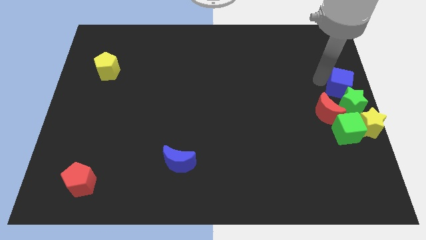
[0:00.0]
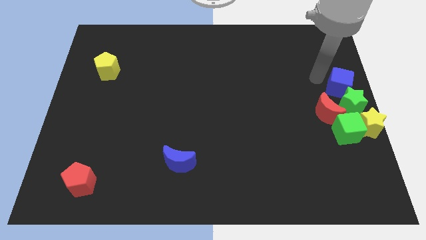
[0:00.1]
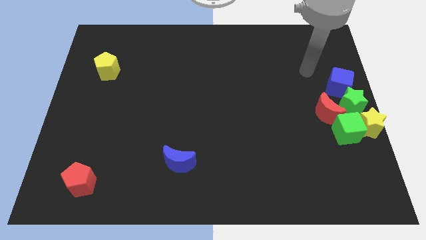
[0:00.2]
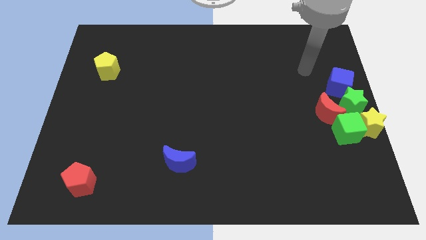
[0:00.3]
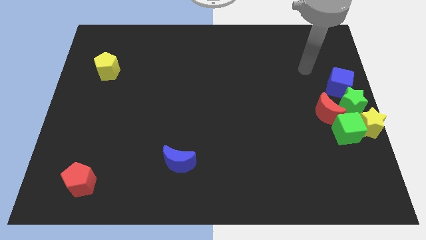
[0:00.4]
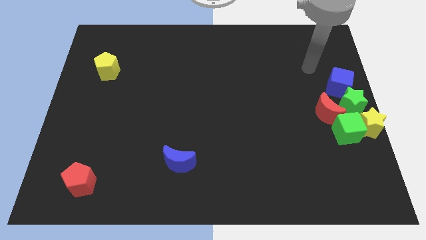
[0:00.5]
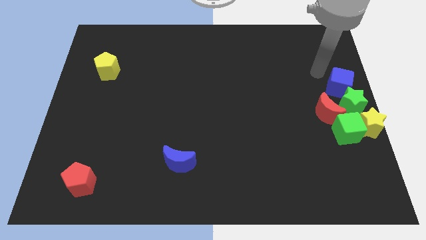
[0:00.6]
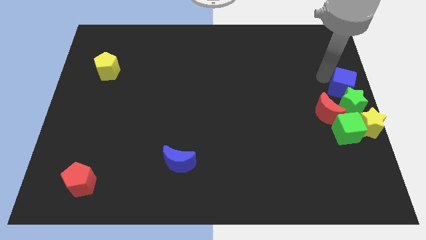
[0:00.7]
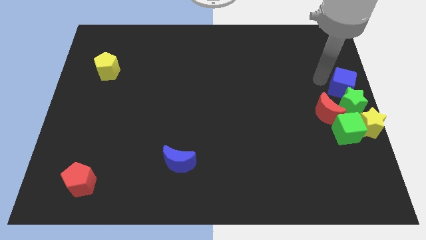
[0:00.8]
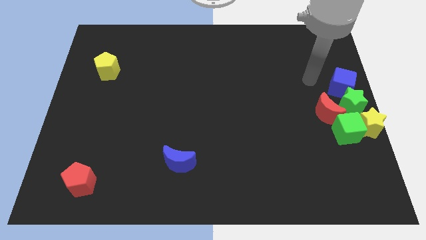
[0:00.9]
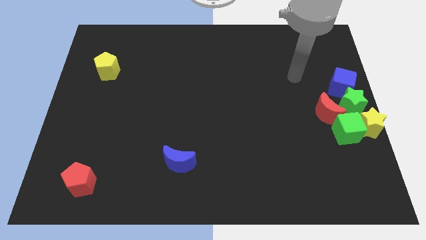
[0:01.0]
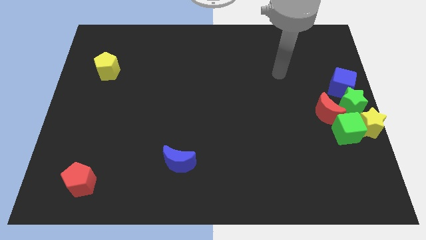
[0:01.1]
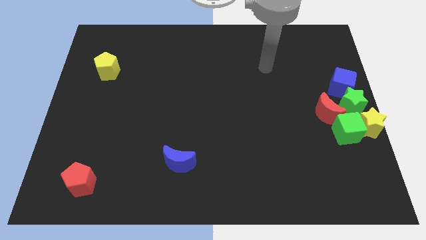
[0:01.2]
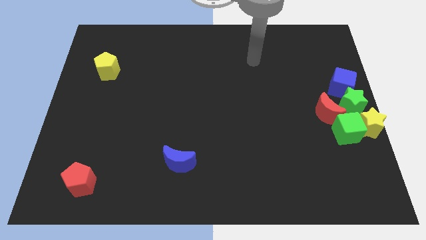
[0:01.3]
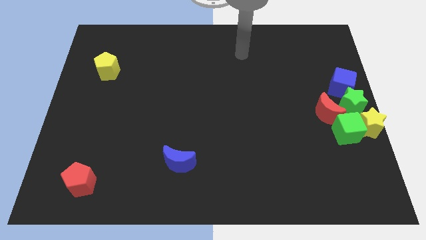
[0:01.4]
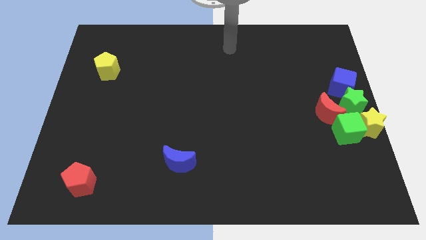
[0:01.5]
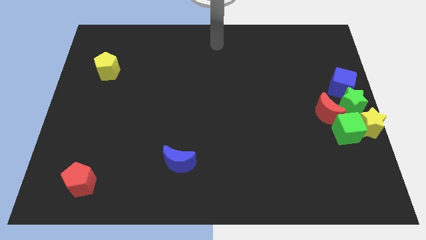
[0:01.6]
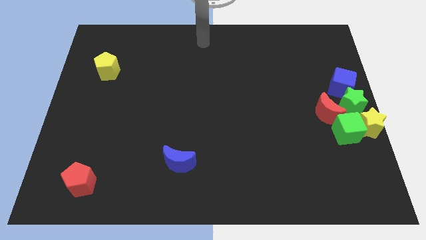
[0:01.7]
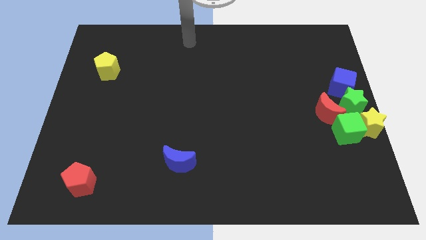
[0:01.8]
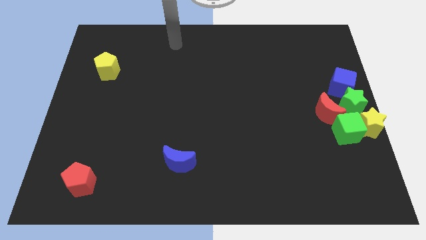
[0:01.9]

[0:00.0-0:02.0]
move the arm away from blue cube

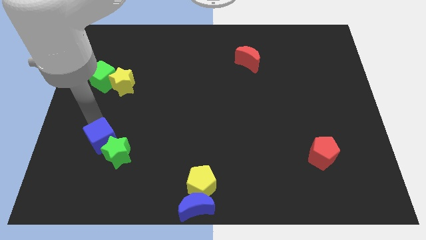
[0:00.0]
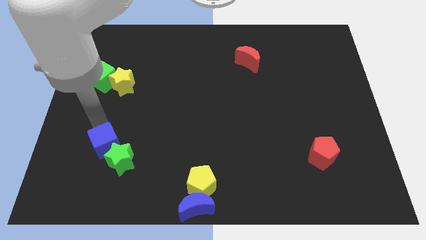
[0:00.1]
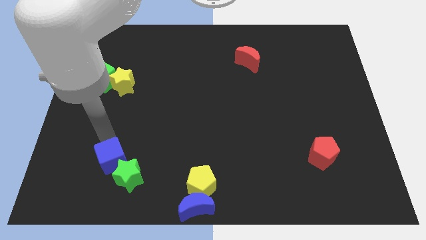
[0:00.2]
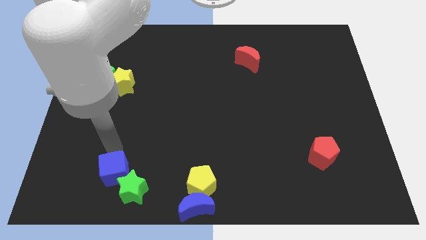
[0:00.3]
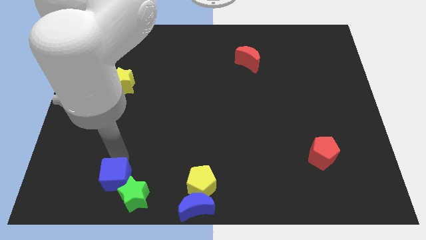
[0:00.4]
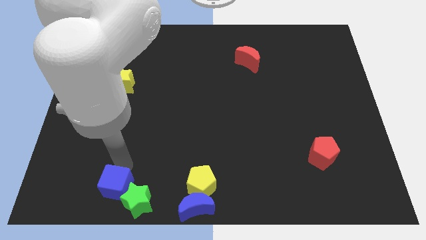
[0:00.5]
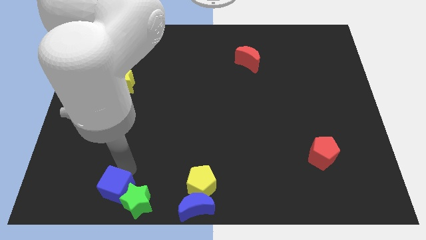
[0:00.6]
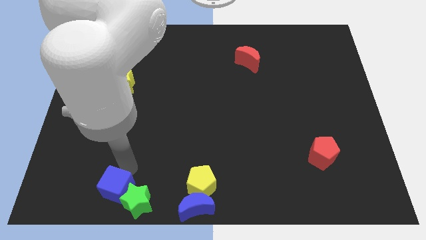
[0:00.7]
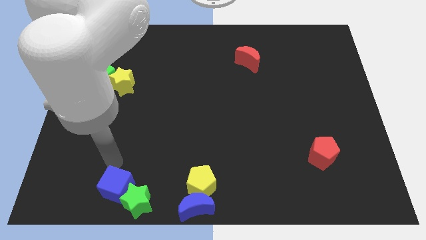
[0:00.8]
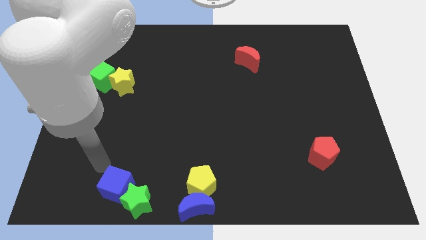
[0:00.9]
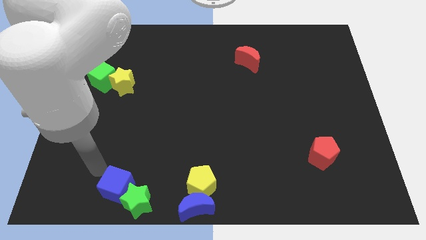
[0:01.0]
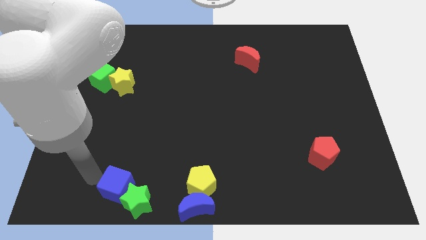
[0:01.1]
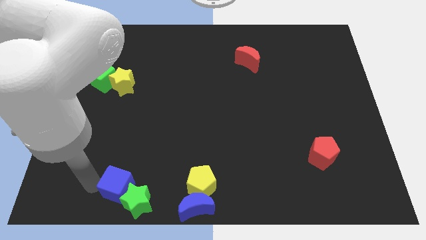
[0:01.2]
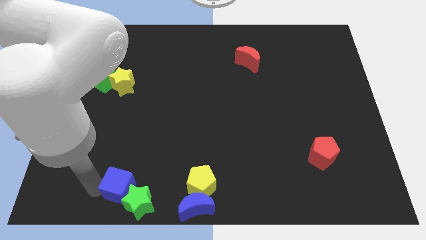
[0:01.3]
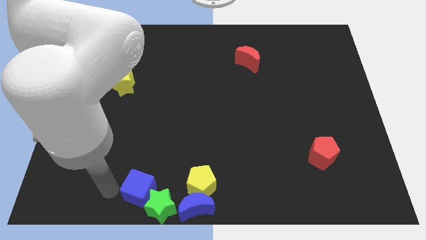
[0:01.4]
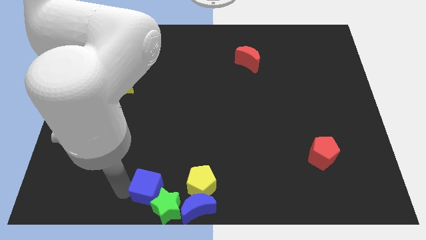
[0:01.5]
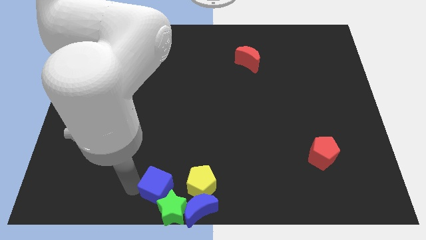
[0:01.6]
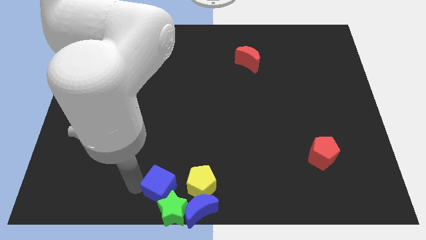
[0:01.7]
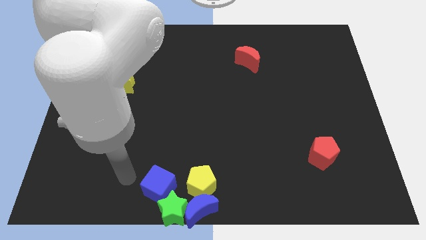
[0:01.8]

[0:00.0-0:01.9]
move the blue cube along with the green star to the left of the yellow pentagon and the blue crescent

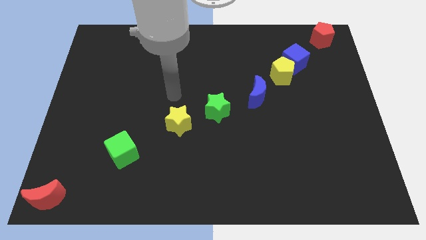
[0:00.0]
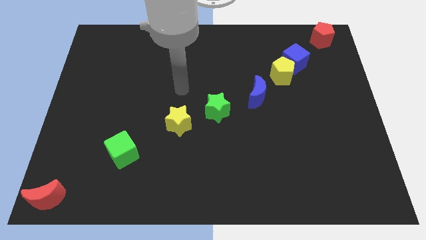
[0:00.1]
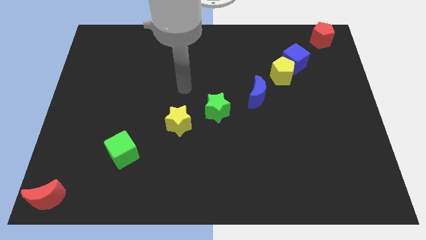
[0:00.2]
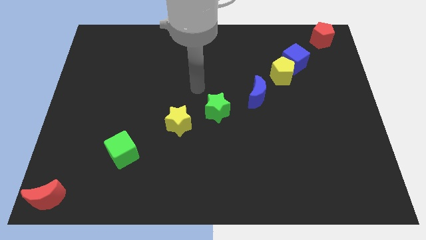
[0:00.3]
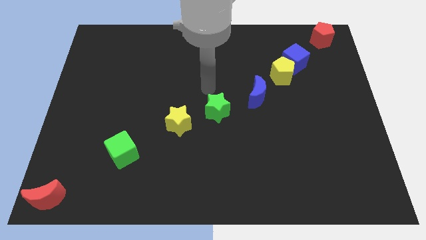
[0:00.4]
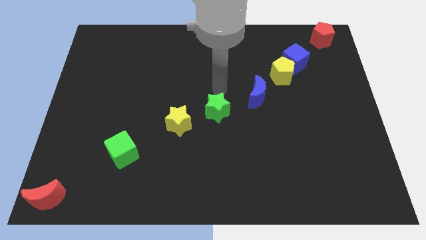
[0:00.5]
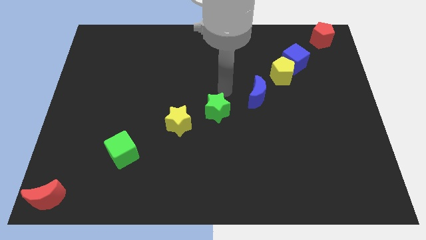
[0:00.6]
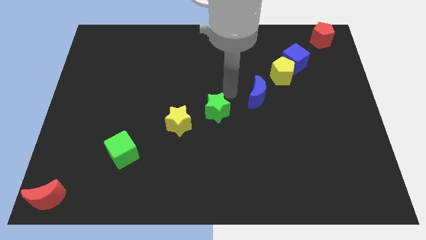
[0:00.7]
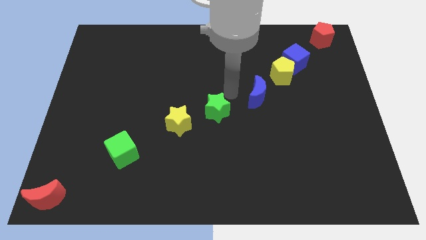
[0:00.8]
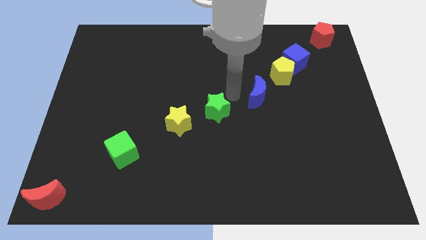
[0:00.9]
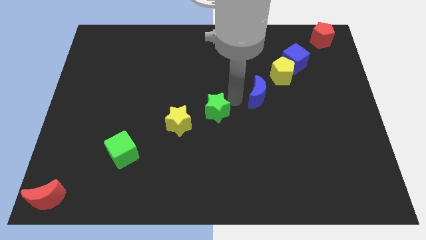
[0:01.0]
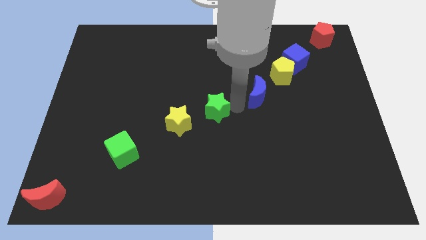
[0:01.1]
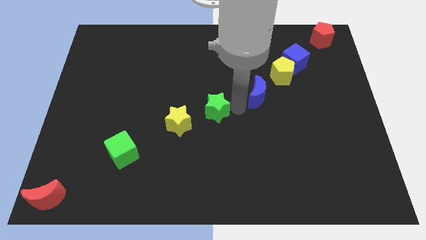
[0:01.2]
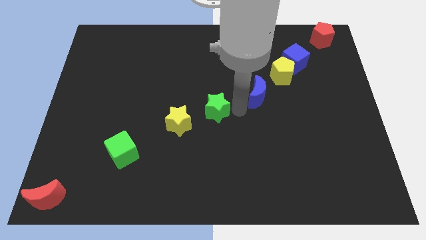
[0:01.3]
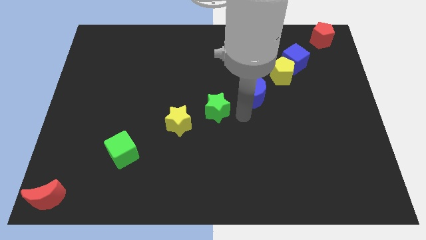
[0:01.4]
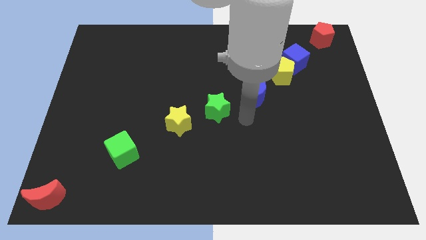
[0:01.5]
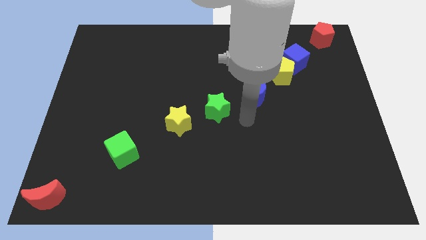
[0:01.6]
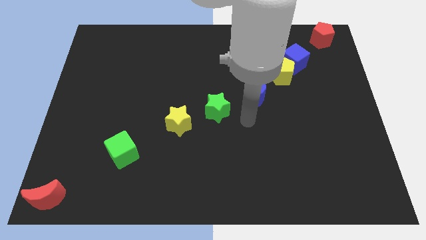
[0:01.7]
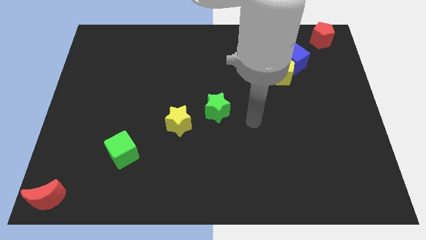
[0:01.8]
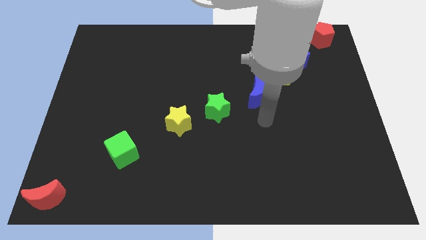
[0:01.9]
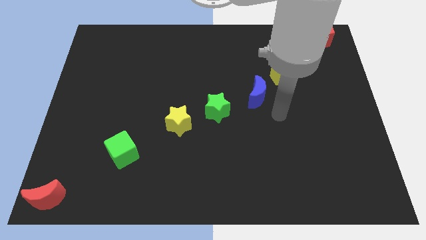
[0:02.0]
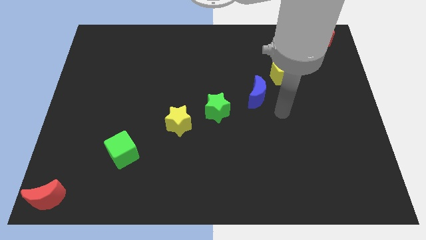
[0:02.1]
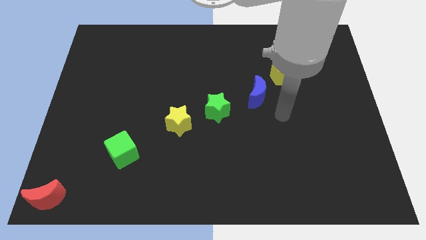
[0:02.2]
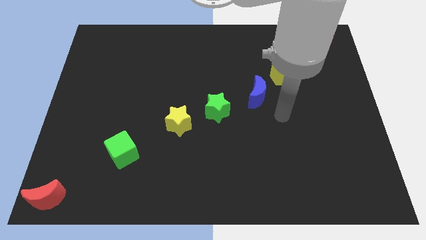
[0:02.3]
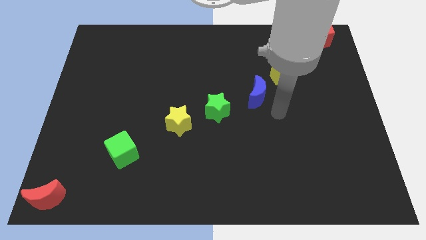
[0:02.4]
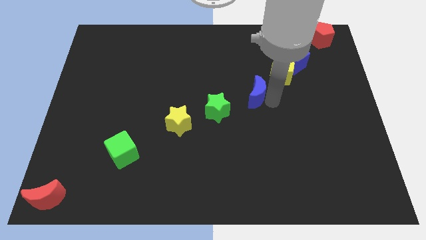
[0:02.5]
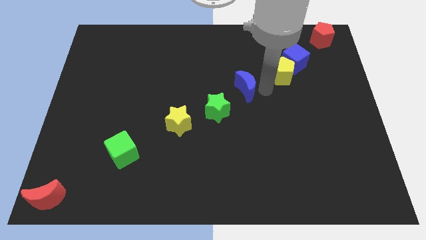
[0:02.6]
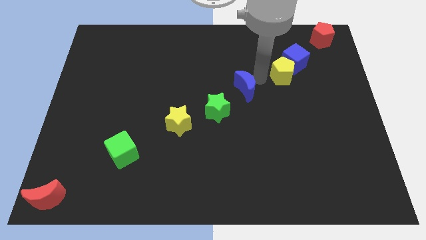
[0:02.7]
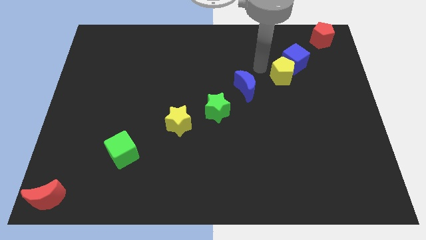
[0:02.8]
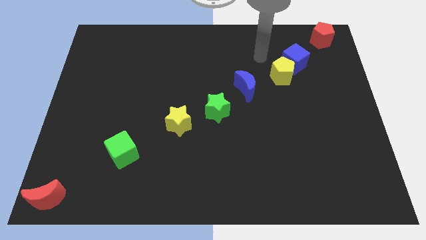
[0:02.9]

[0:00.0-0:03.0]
move the blue moon slightly towards the top of the board

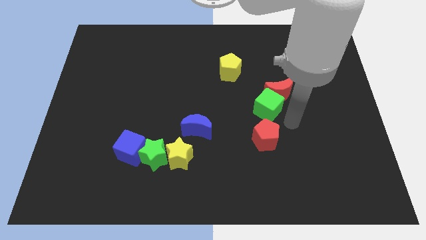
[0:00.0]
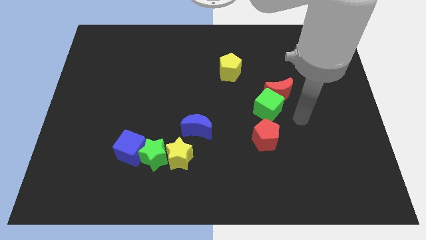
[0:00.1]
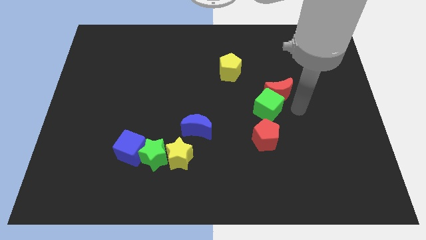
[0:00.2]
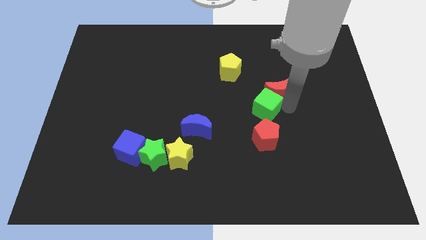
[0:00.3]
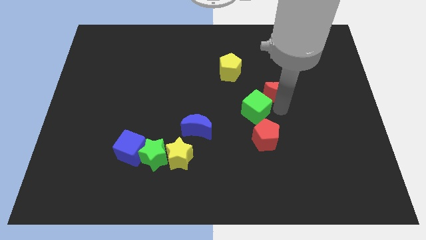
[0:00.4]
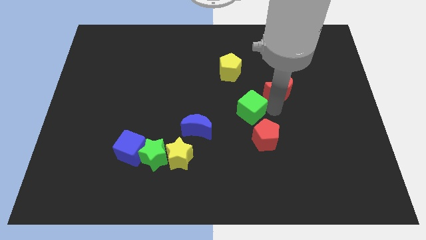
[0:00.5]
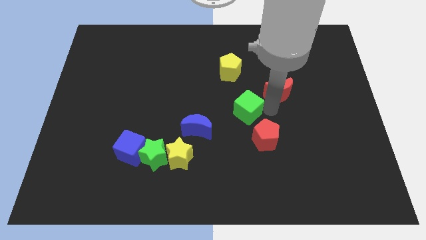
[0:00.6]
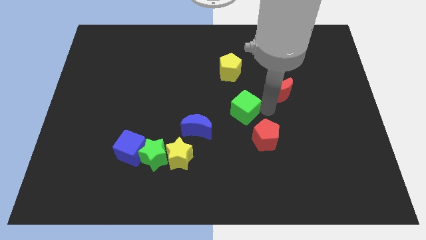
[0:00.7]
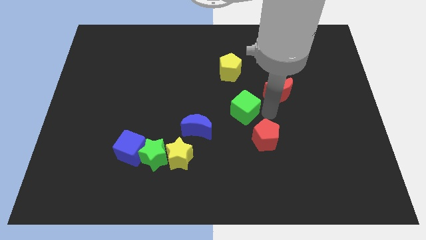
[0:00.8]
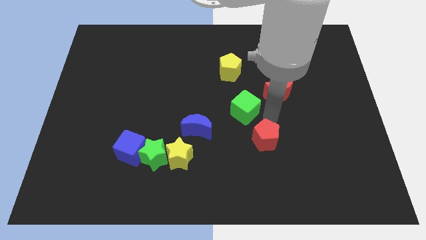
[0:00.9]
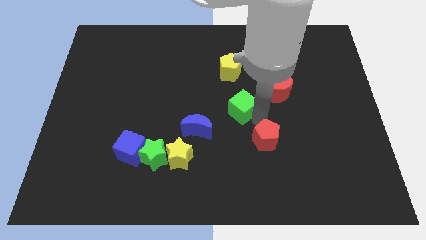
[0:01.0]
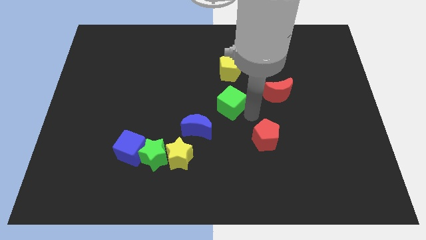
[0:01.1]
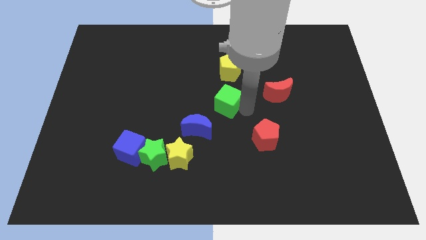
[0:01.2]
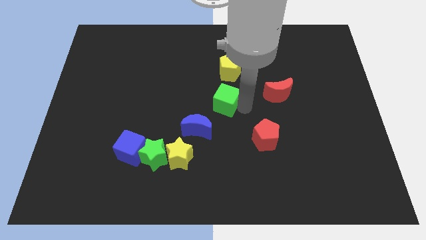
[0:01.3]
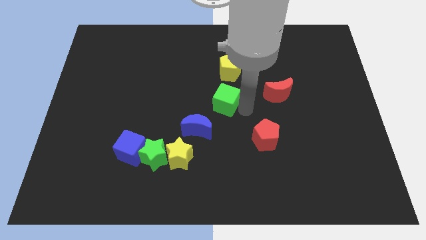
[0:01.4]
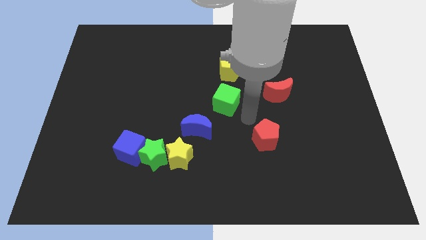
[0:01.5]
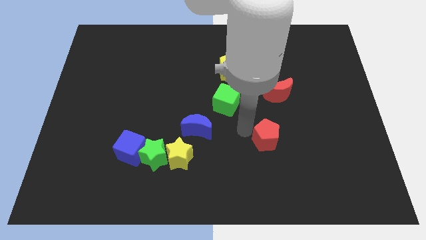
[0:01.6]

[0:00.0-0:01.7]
move the green cube below the yellow pentagon

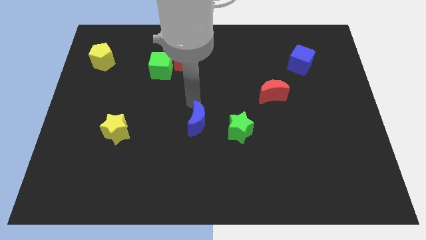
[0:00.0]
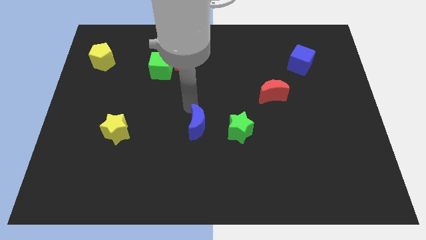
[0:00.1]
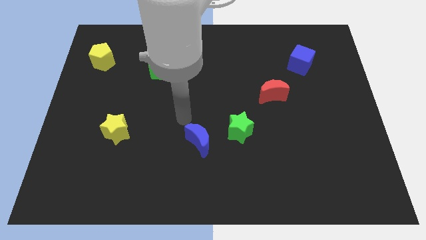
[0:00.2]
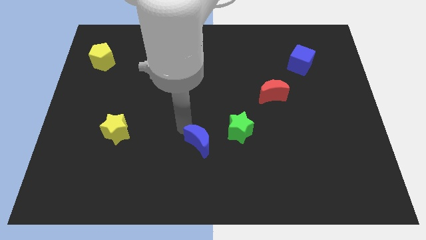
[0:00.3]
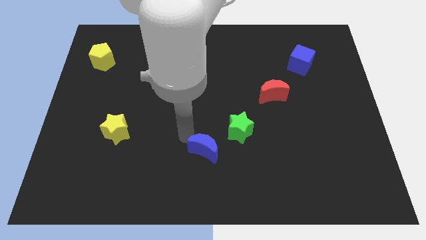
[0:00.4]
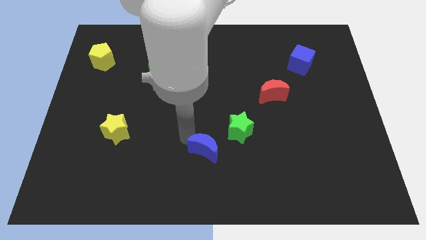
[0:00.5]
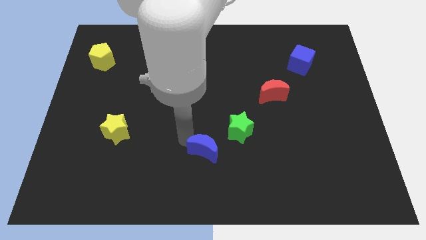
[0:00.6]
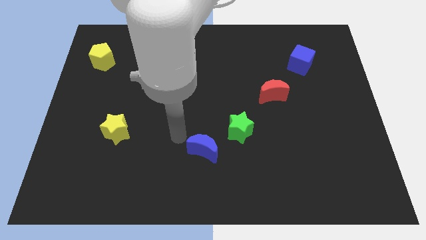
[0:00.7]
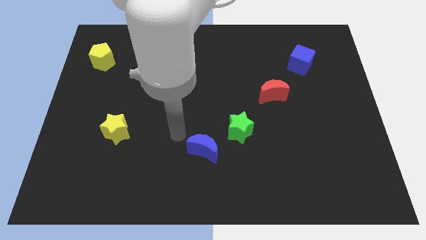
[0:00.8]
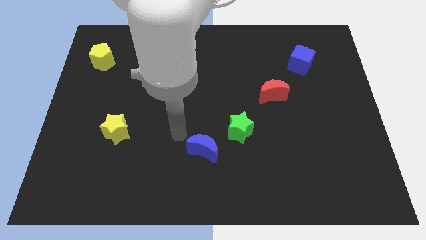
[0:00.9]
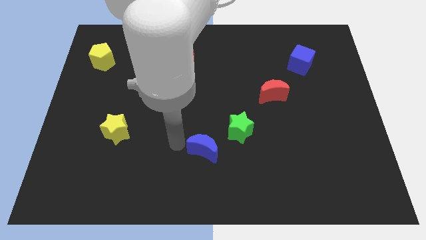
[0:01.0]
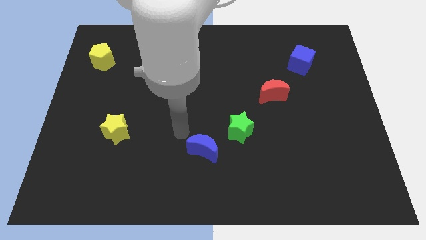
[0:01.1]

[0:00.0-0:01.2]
move blue crescent towards bottom
